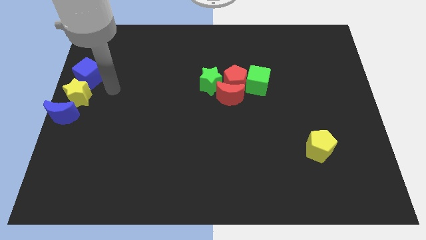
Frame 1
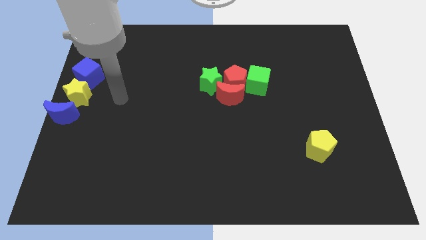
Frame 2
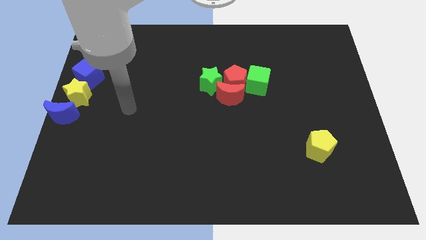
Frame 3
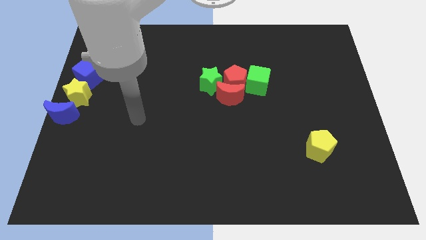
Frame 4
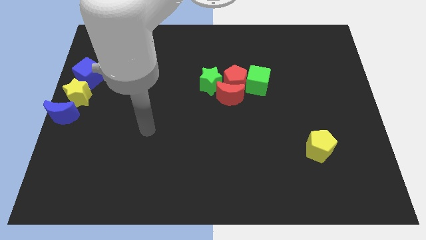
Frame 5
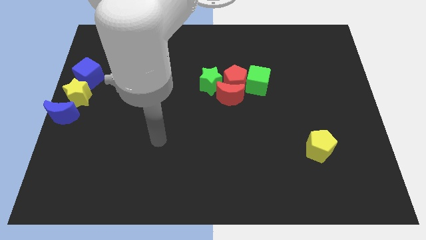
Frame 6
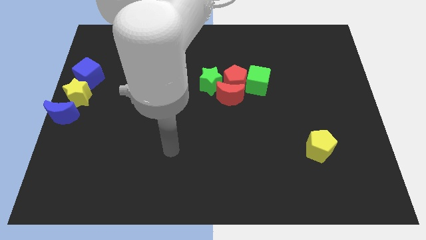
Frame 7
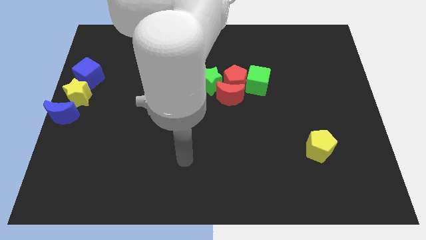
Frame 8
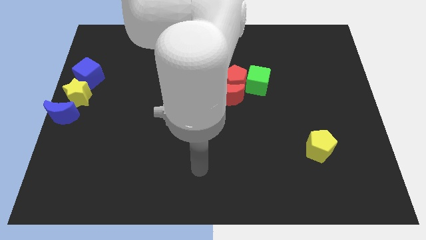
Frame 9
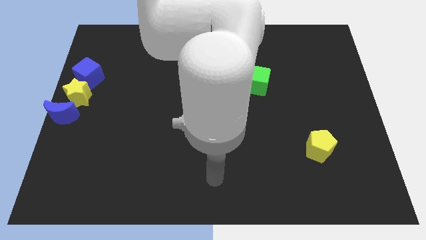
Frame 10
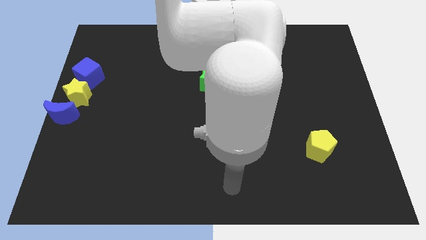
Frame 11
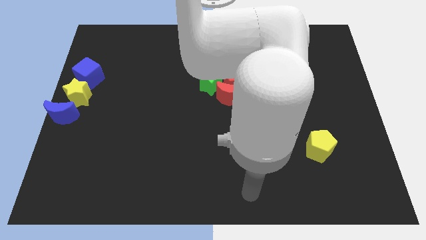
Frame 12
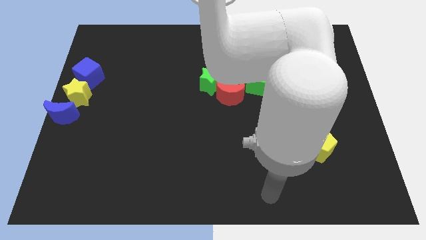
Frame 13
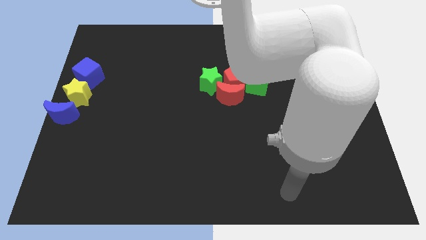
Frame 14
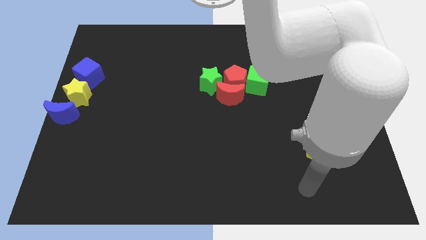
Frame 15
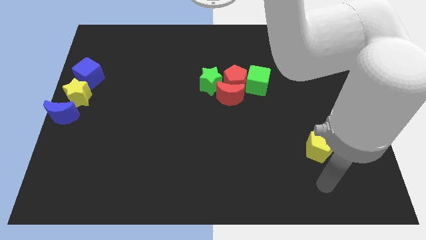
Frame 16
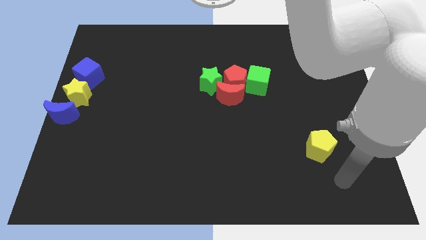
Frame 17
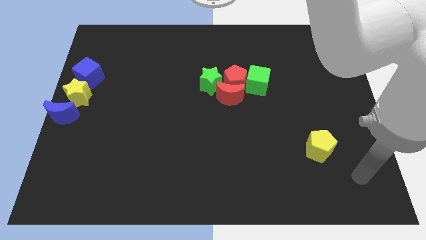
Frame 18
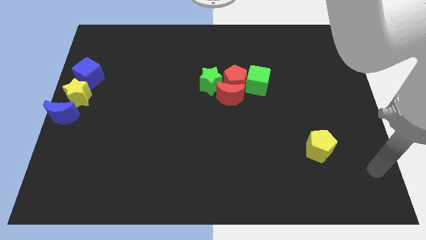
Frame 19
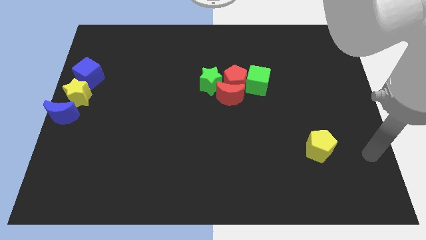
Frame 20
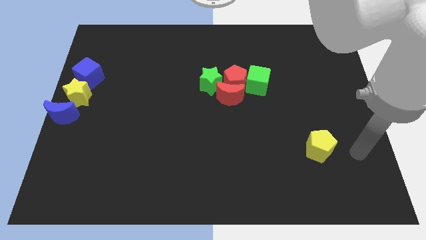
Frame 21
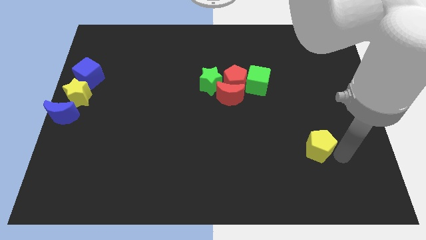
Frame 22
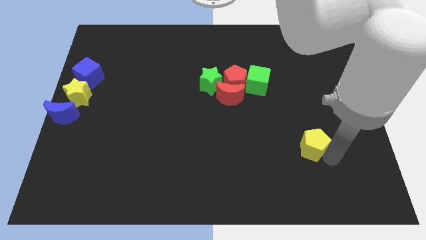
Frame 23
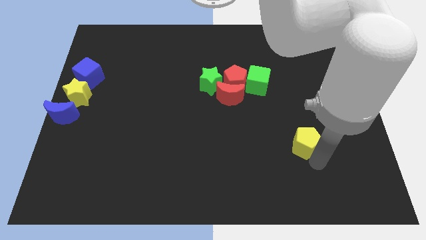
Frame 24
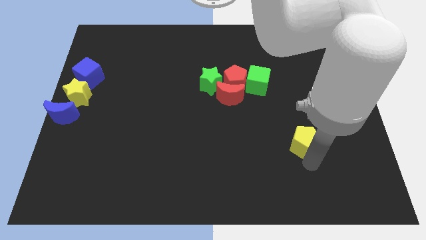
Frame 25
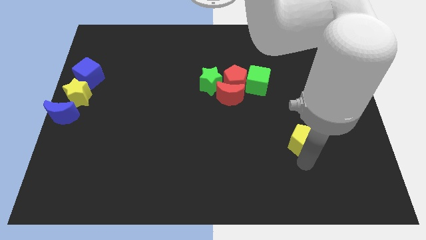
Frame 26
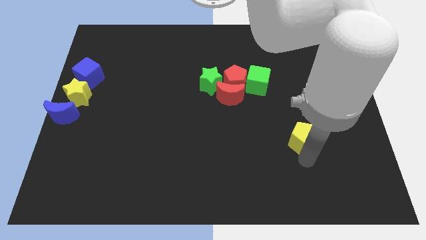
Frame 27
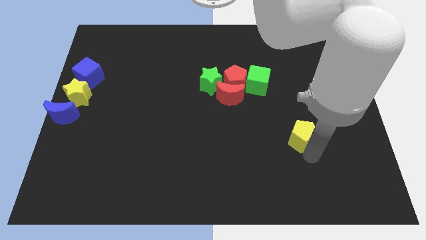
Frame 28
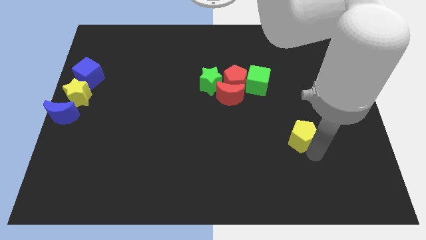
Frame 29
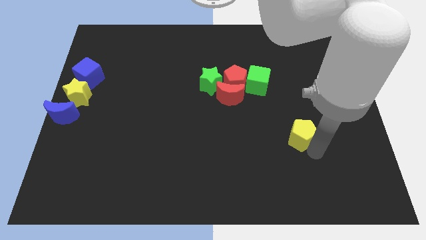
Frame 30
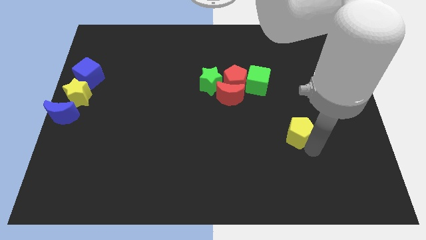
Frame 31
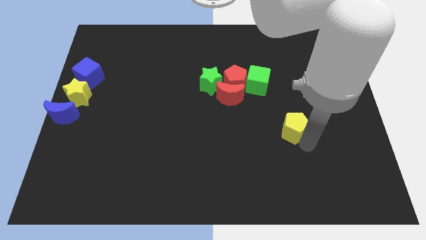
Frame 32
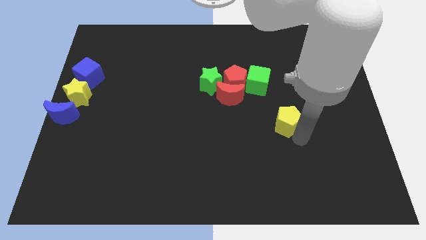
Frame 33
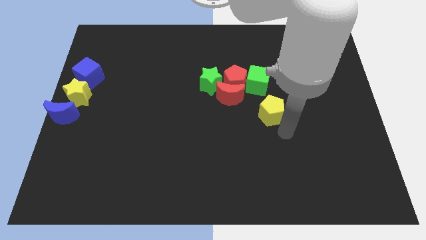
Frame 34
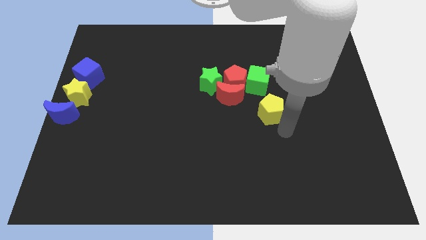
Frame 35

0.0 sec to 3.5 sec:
move the yellow pentagon close to the green cube

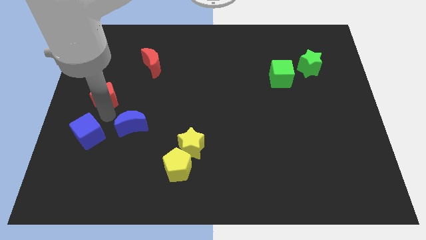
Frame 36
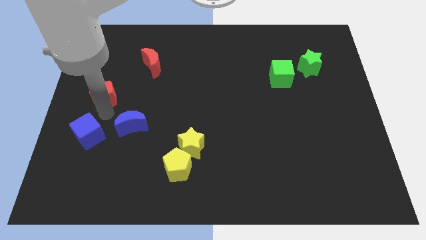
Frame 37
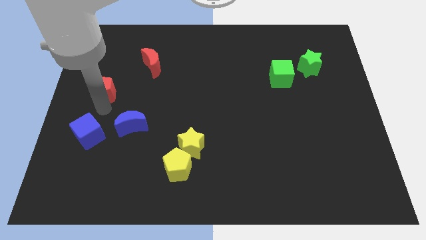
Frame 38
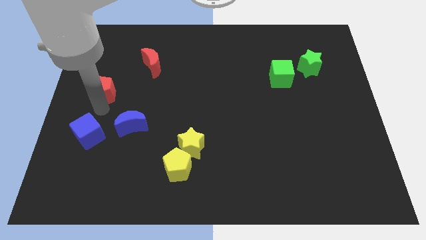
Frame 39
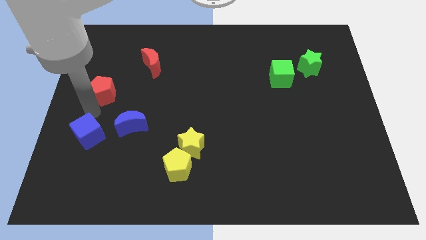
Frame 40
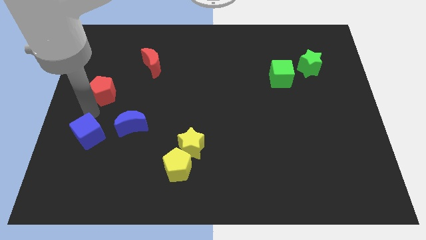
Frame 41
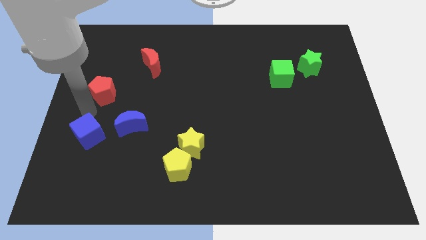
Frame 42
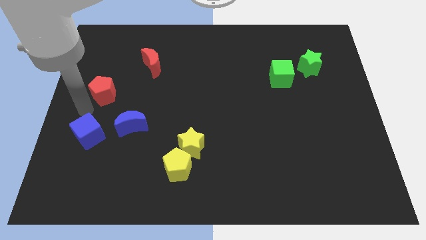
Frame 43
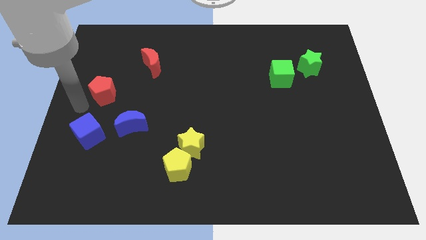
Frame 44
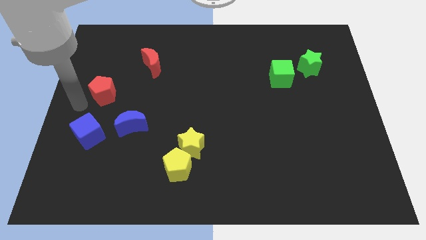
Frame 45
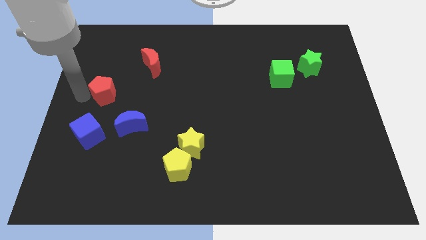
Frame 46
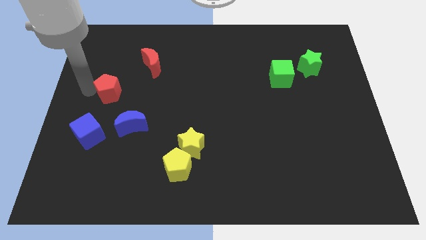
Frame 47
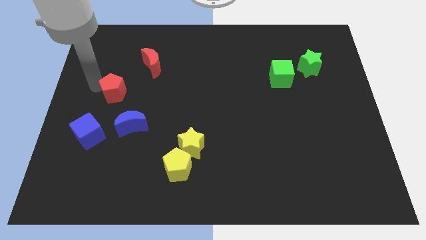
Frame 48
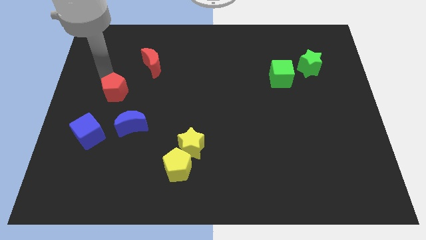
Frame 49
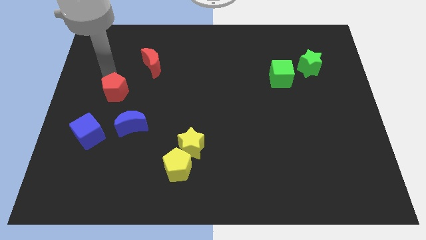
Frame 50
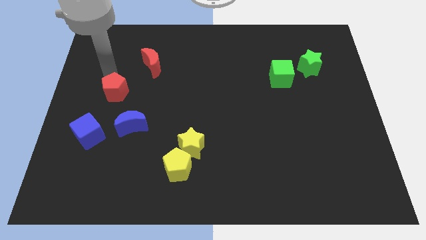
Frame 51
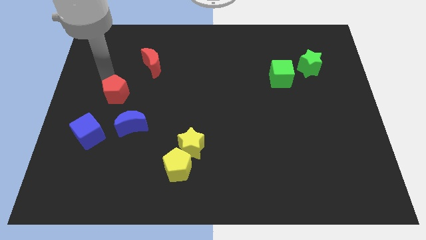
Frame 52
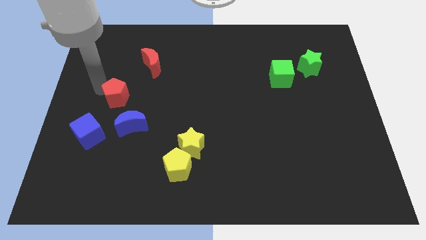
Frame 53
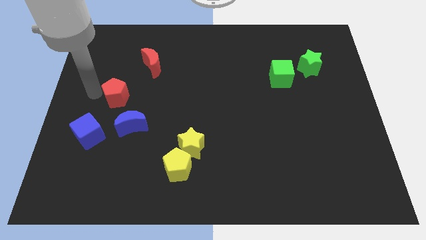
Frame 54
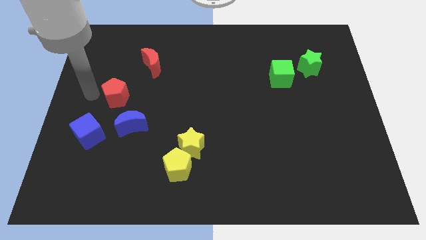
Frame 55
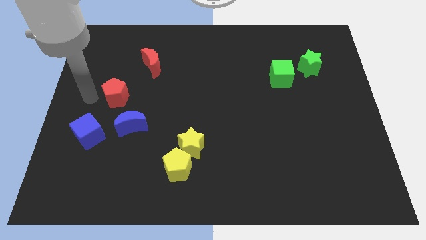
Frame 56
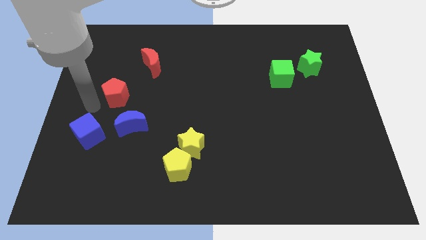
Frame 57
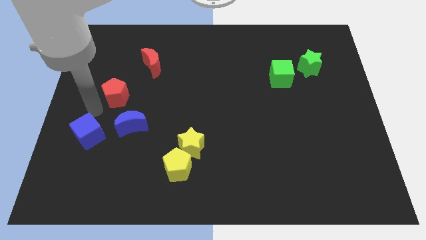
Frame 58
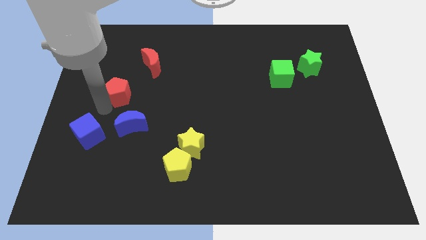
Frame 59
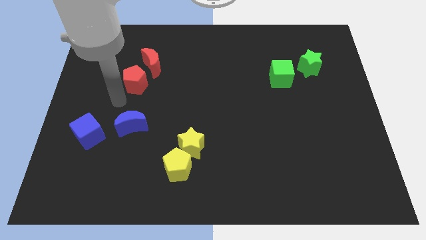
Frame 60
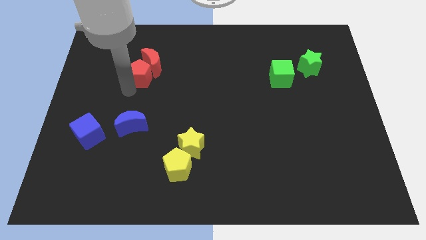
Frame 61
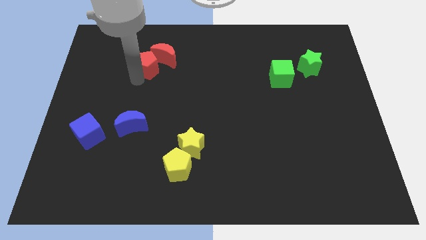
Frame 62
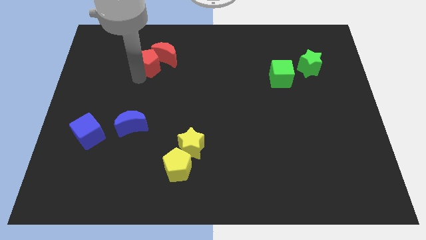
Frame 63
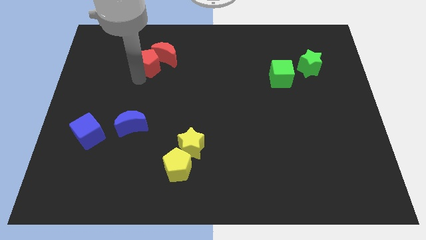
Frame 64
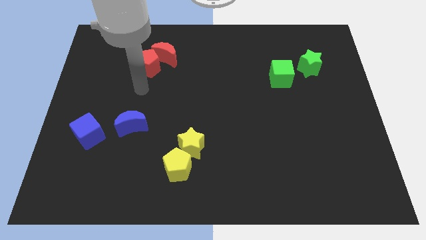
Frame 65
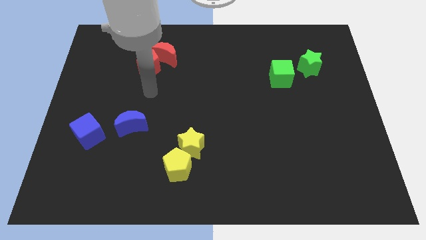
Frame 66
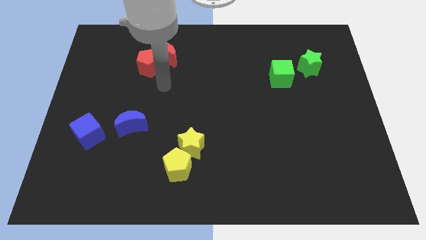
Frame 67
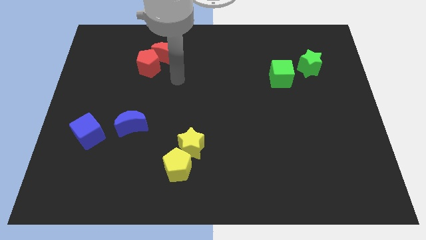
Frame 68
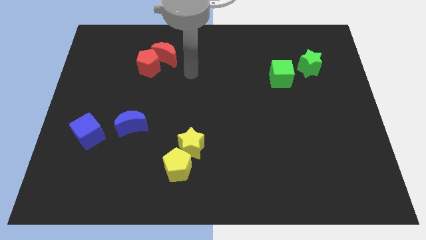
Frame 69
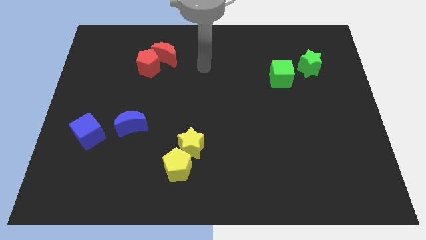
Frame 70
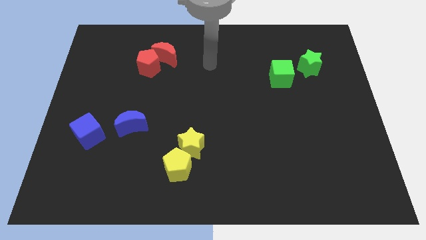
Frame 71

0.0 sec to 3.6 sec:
move the red pentagon to the bottom side of the red moon

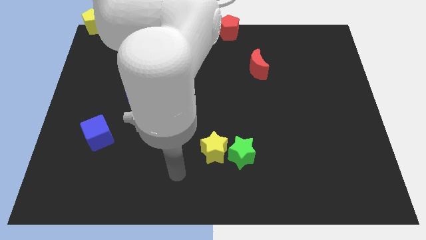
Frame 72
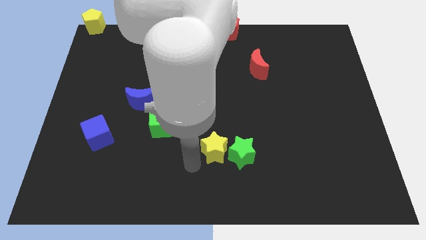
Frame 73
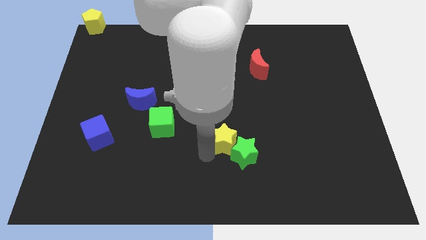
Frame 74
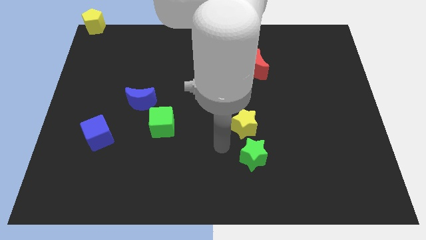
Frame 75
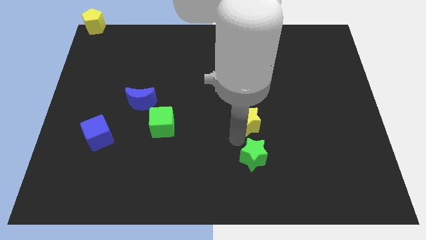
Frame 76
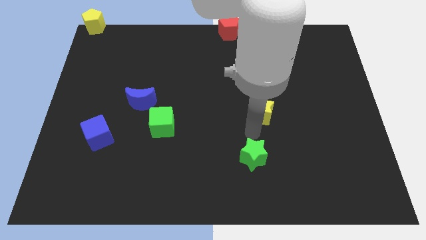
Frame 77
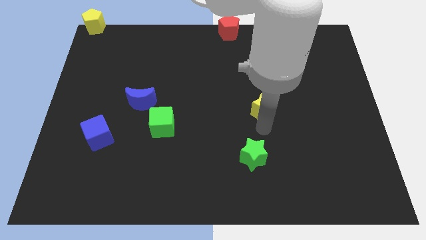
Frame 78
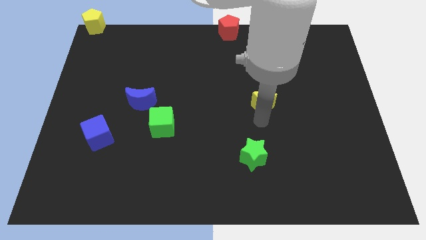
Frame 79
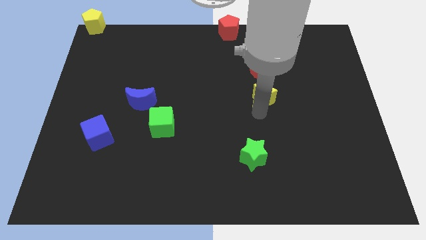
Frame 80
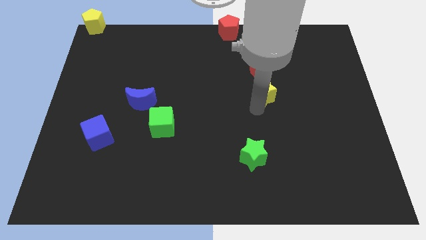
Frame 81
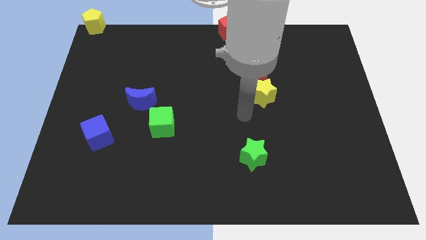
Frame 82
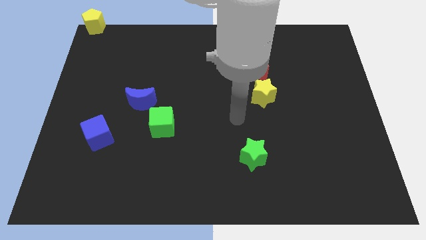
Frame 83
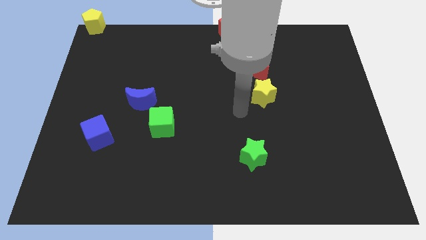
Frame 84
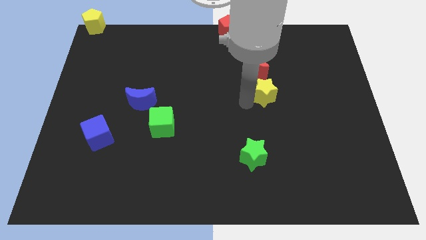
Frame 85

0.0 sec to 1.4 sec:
push yellow star below red crescent

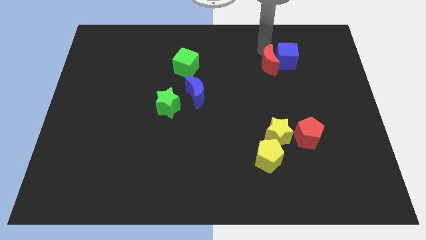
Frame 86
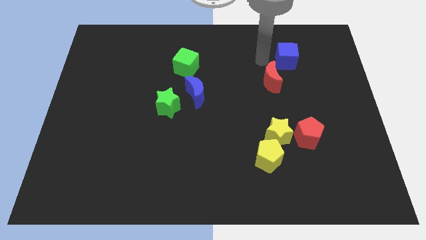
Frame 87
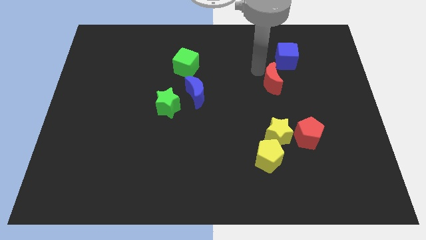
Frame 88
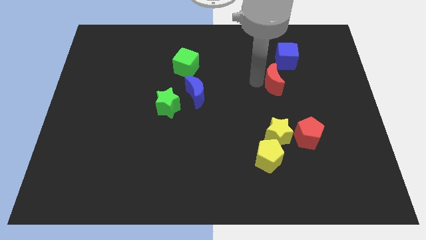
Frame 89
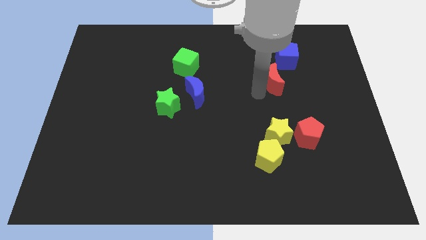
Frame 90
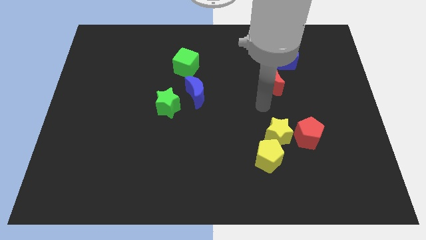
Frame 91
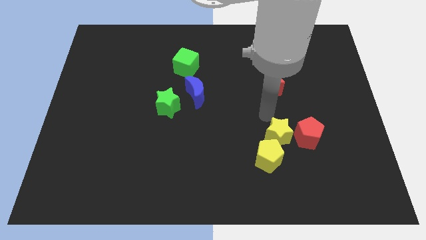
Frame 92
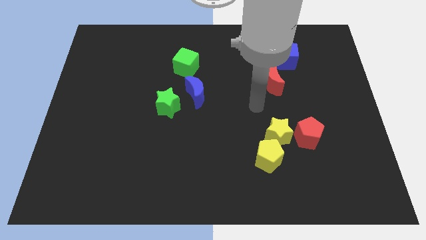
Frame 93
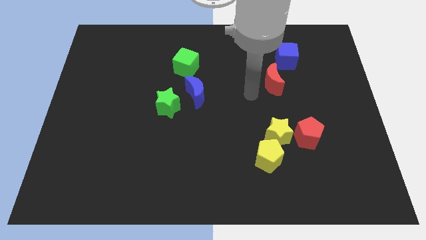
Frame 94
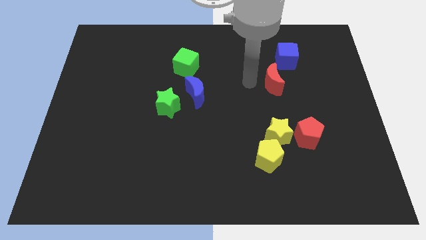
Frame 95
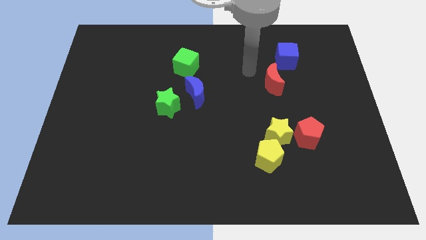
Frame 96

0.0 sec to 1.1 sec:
push the red moon to the bottom left side of the blue cube
